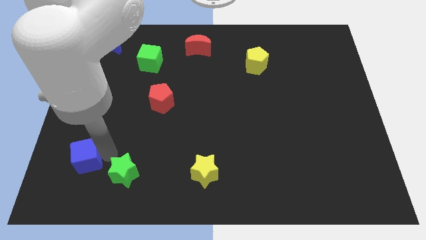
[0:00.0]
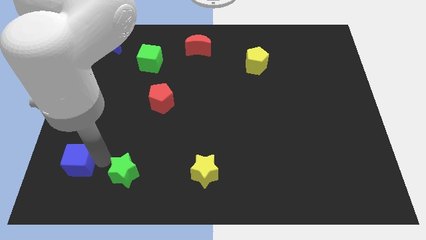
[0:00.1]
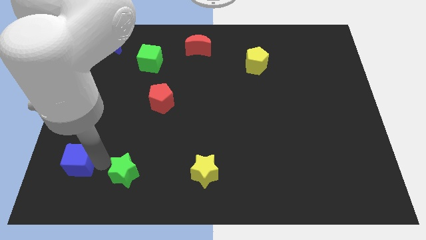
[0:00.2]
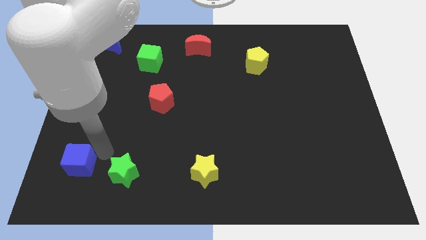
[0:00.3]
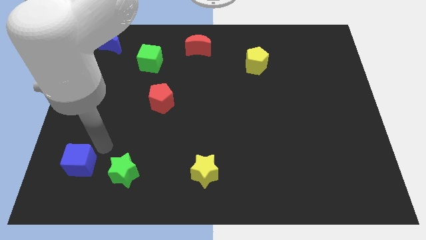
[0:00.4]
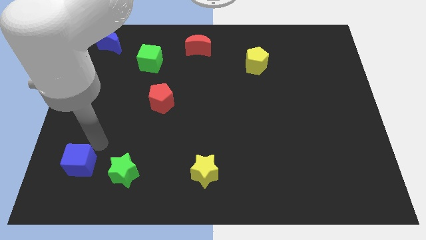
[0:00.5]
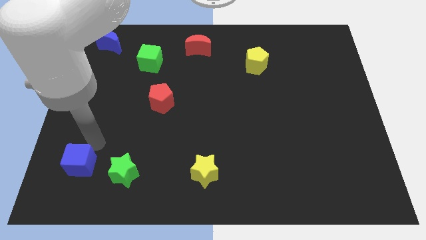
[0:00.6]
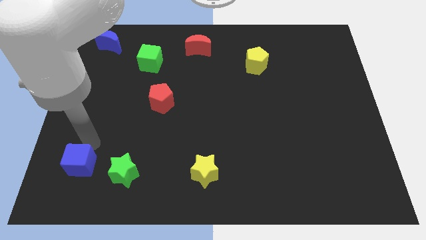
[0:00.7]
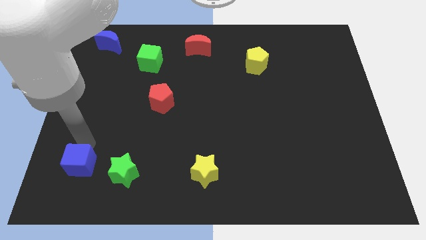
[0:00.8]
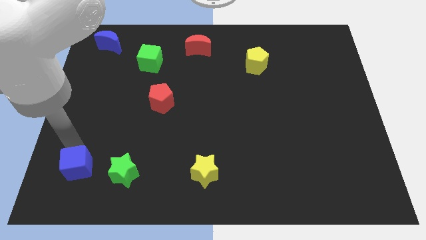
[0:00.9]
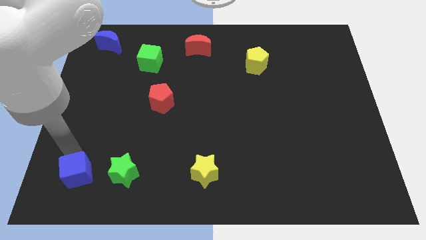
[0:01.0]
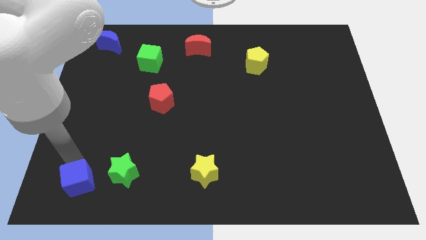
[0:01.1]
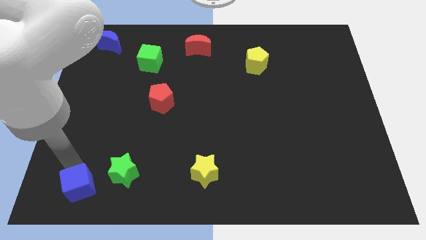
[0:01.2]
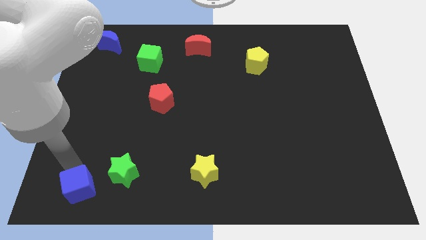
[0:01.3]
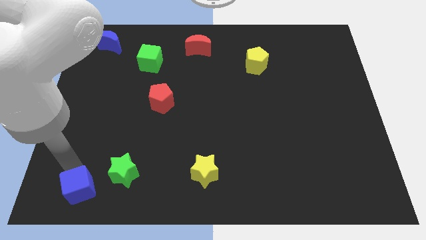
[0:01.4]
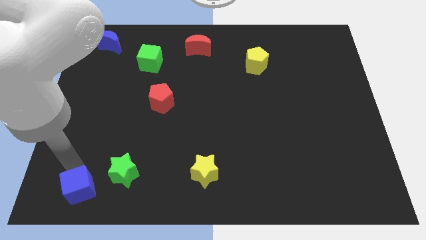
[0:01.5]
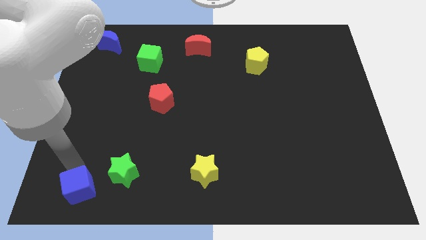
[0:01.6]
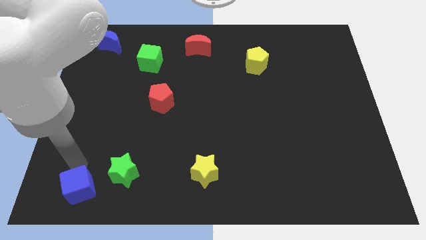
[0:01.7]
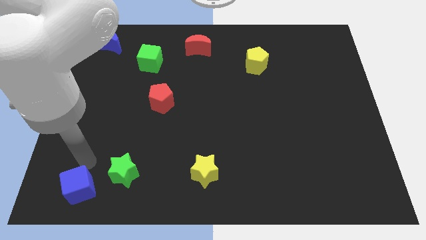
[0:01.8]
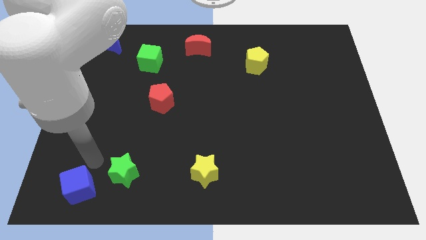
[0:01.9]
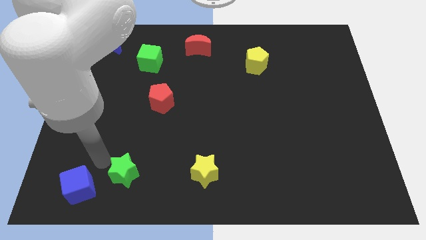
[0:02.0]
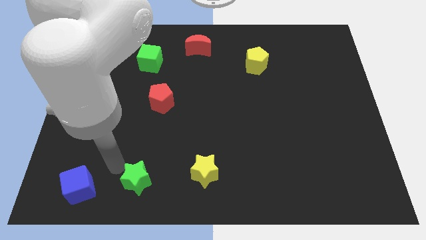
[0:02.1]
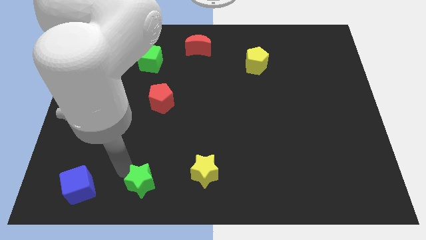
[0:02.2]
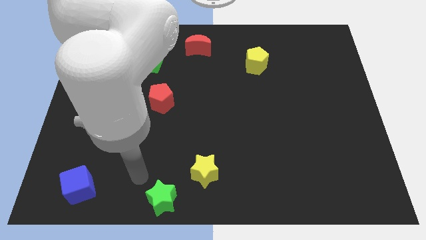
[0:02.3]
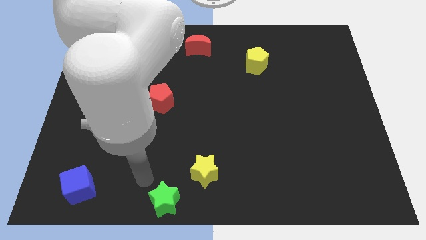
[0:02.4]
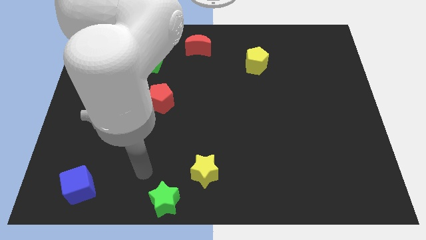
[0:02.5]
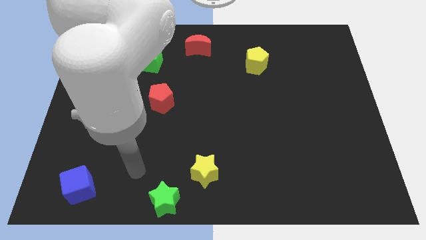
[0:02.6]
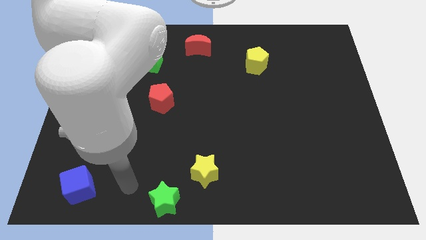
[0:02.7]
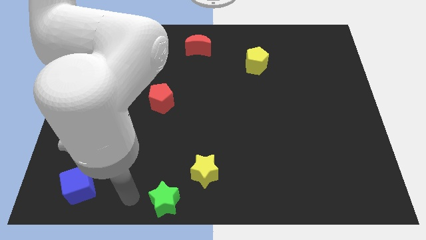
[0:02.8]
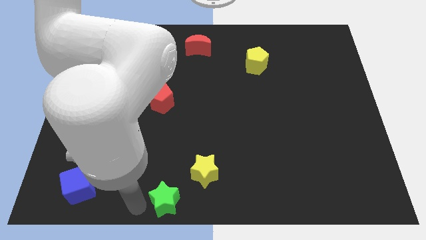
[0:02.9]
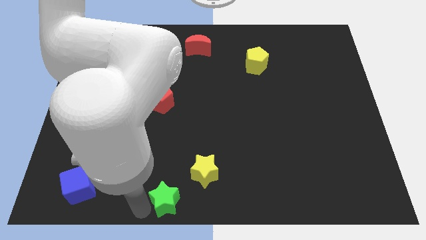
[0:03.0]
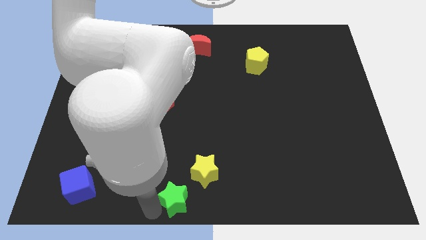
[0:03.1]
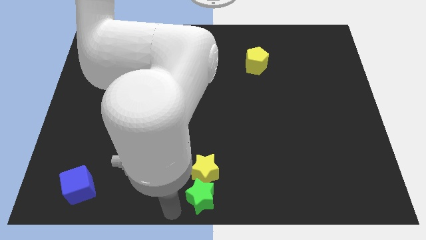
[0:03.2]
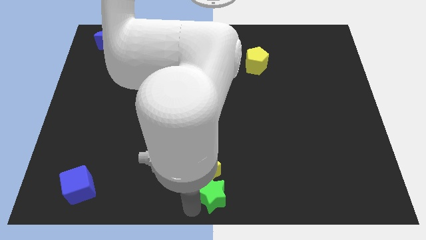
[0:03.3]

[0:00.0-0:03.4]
push the green star to the bottom center of the board

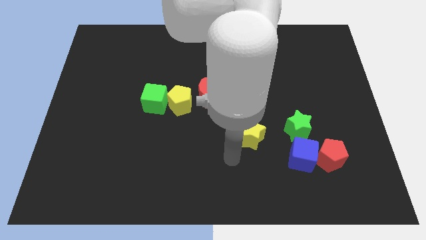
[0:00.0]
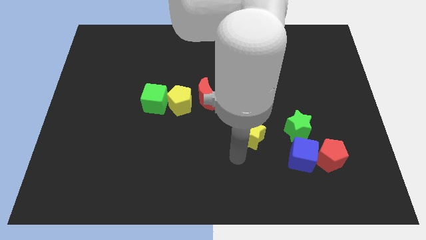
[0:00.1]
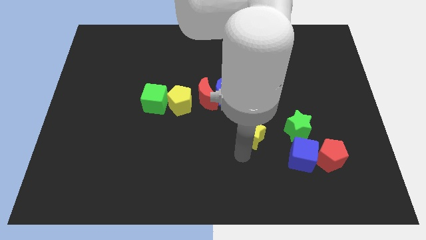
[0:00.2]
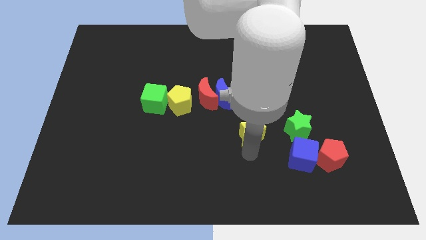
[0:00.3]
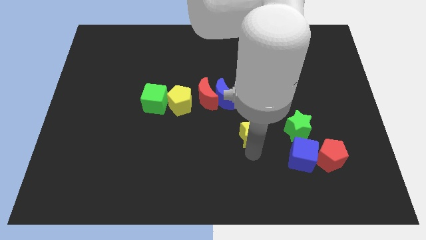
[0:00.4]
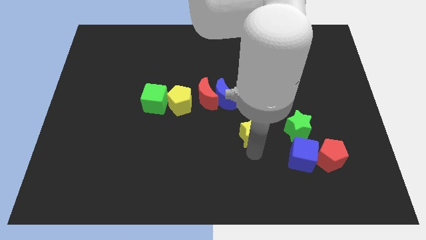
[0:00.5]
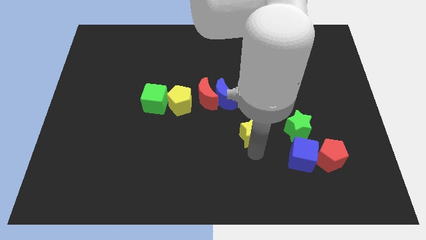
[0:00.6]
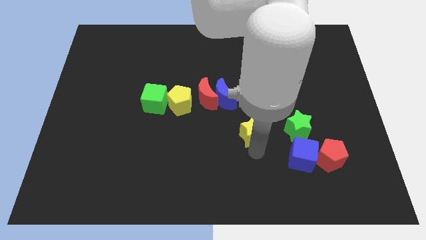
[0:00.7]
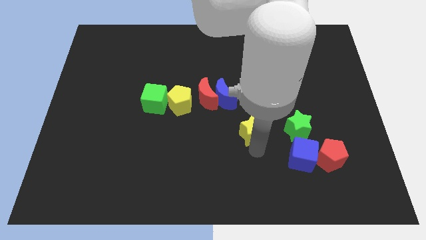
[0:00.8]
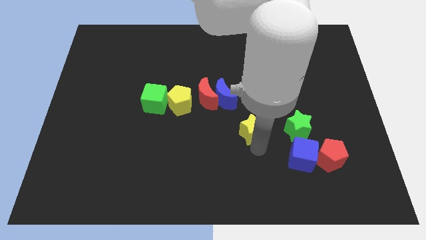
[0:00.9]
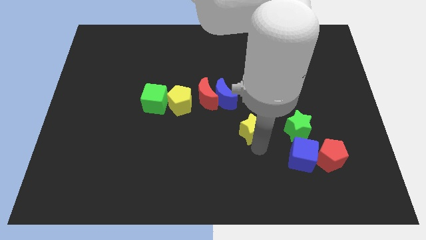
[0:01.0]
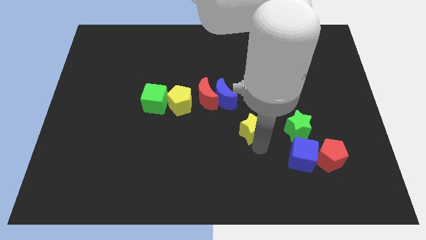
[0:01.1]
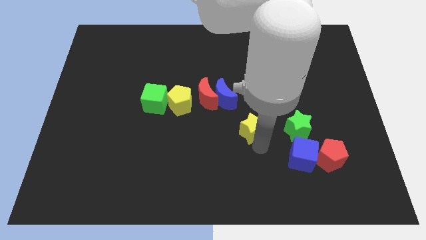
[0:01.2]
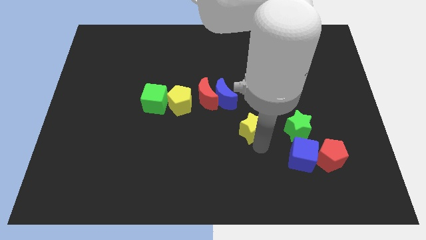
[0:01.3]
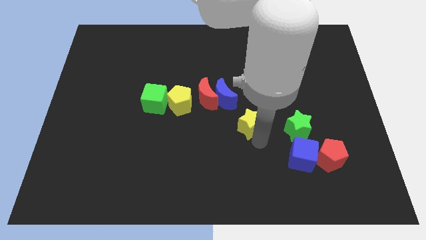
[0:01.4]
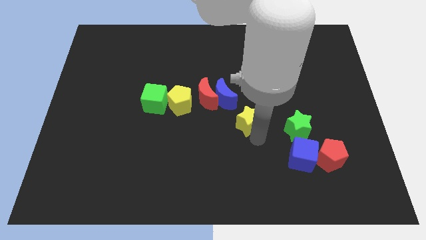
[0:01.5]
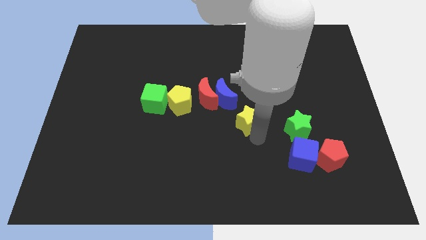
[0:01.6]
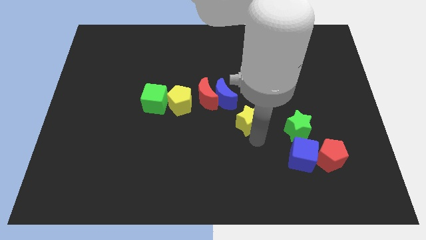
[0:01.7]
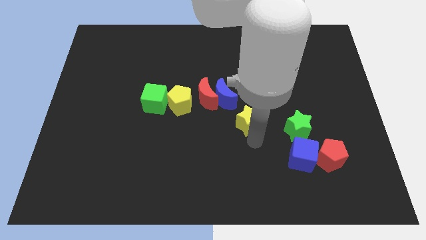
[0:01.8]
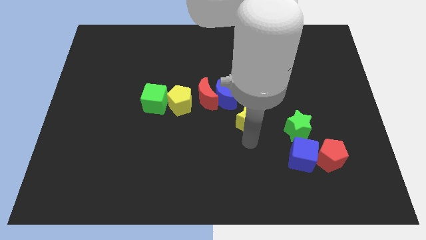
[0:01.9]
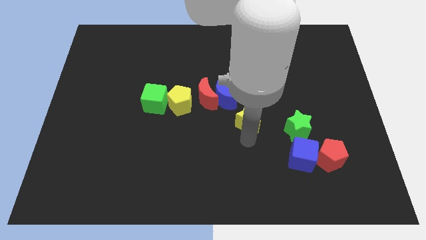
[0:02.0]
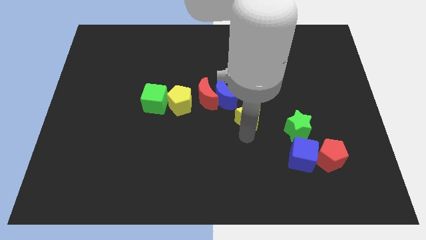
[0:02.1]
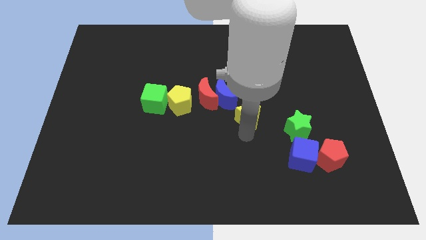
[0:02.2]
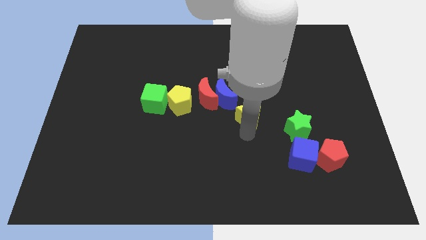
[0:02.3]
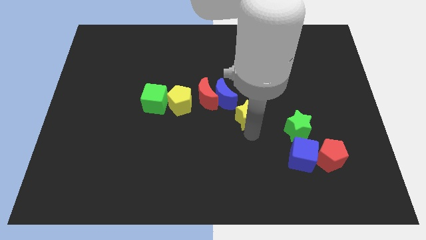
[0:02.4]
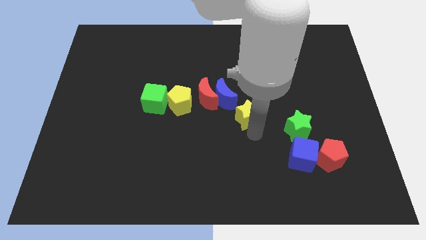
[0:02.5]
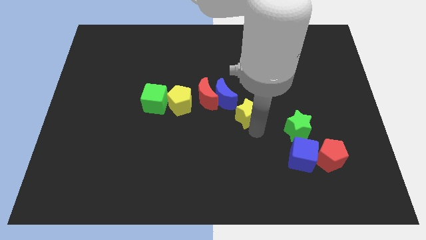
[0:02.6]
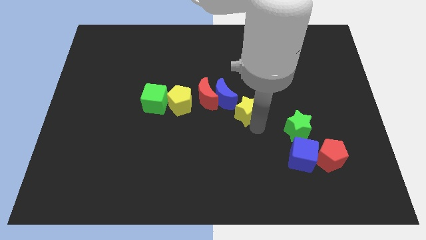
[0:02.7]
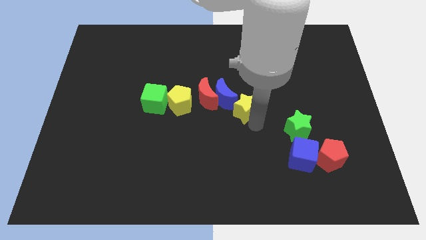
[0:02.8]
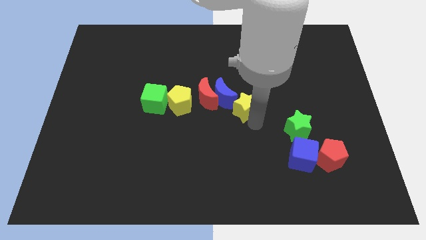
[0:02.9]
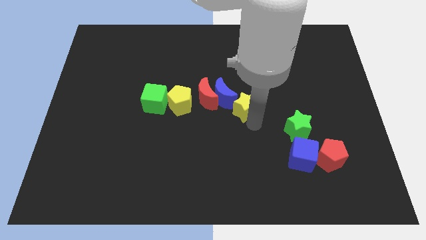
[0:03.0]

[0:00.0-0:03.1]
move yellow star into the bottom of blue moon

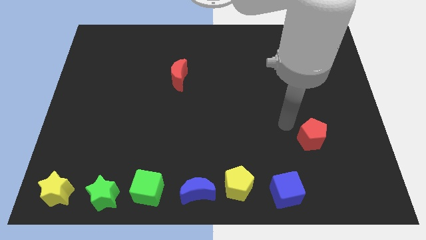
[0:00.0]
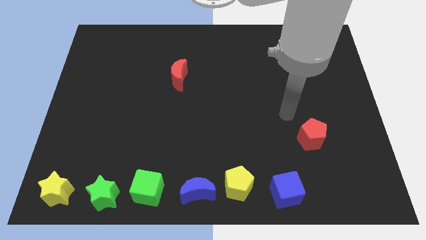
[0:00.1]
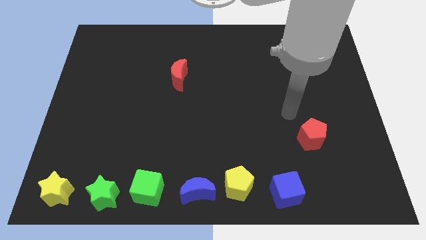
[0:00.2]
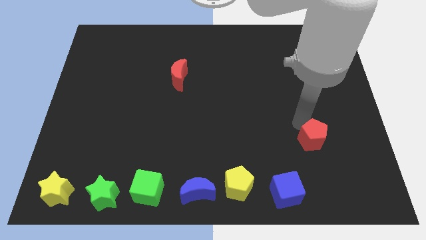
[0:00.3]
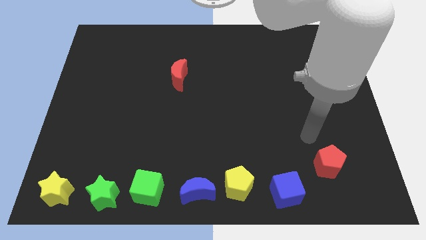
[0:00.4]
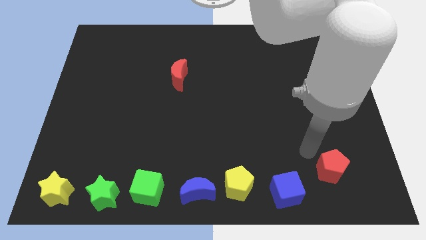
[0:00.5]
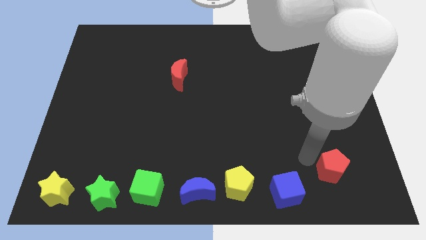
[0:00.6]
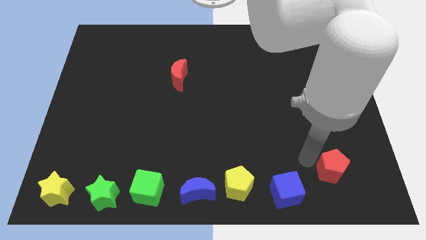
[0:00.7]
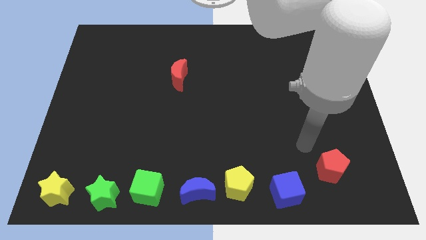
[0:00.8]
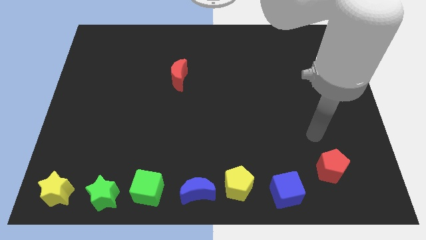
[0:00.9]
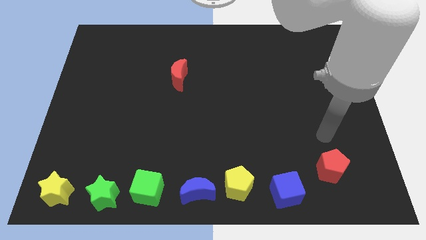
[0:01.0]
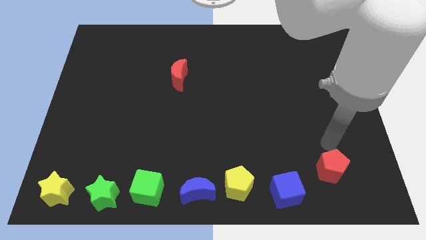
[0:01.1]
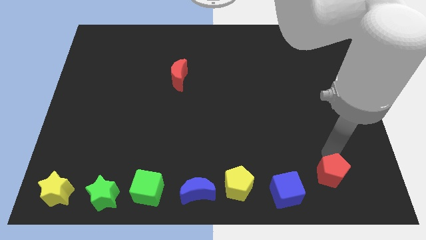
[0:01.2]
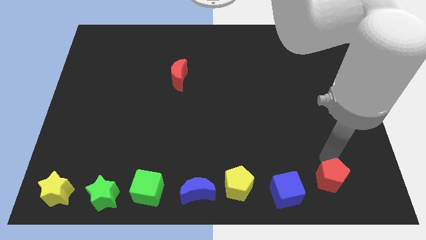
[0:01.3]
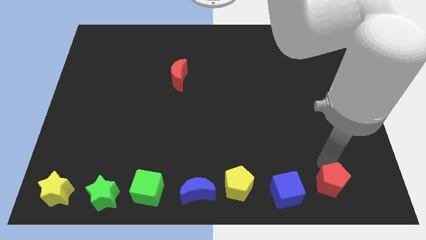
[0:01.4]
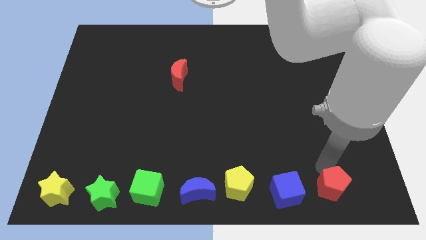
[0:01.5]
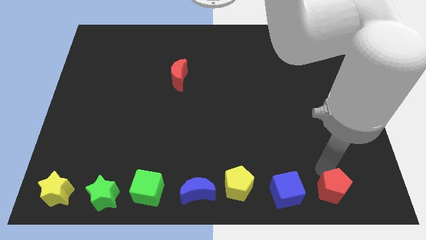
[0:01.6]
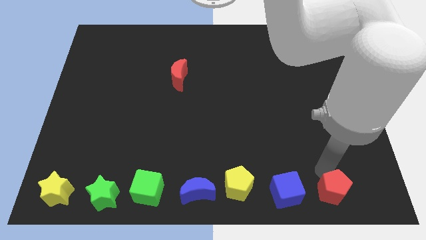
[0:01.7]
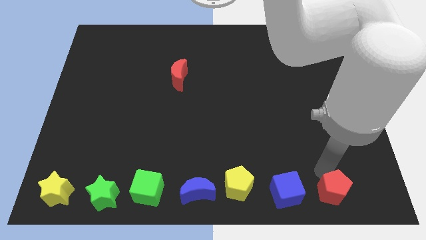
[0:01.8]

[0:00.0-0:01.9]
place the red pentagon right to the blue cube

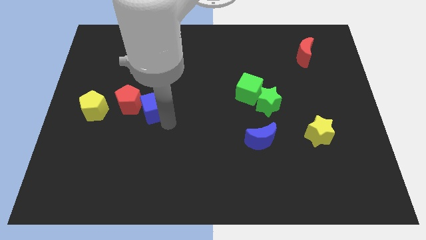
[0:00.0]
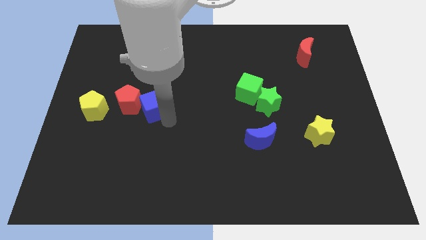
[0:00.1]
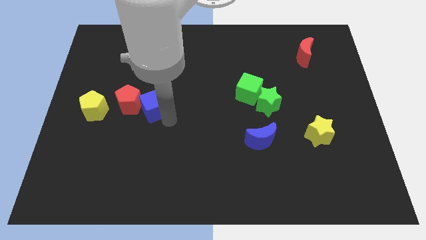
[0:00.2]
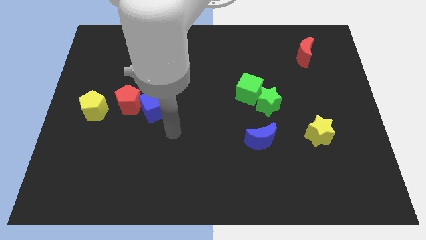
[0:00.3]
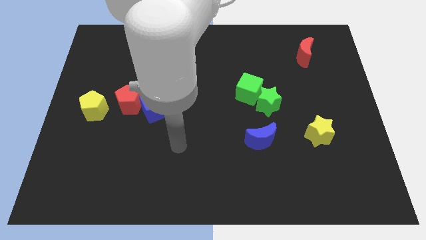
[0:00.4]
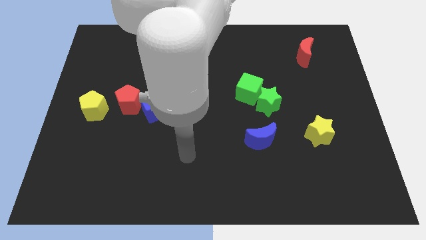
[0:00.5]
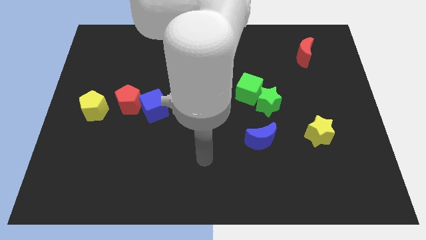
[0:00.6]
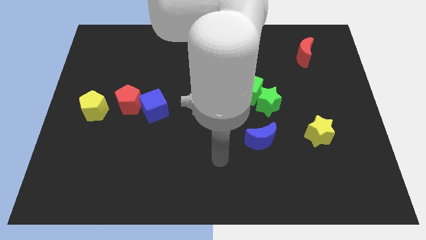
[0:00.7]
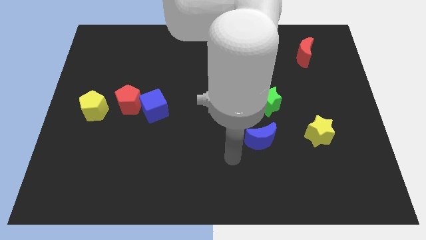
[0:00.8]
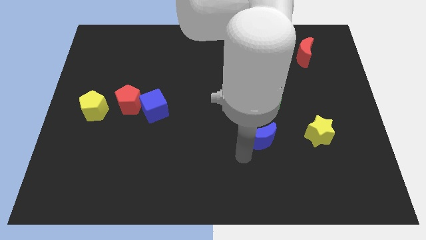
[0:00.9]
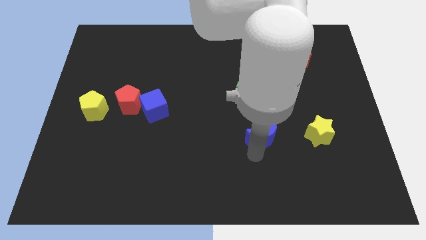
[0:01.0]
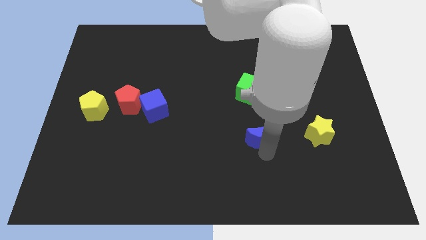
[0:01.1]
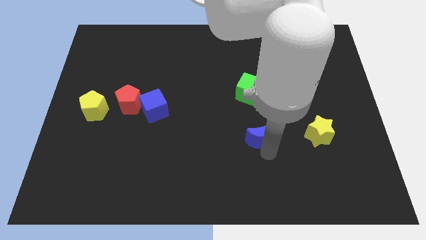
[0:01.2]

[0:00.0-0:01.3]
place the arm down to the blue moon
